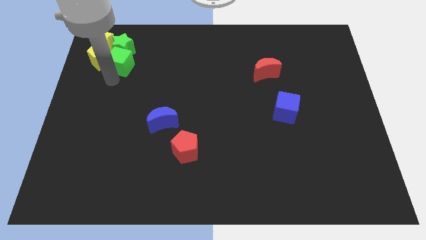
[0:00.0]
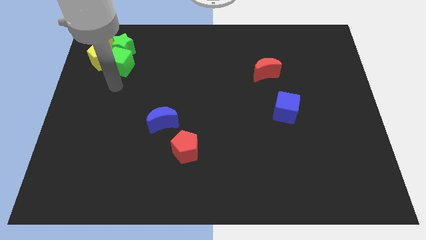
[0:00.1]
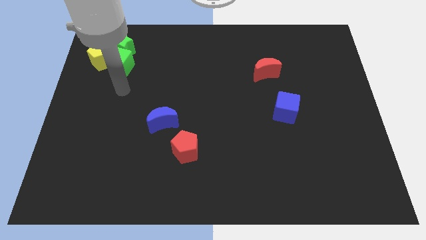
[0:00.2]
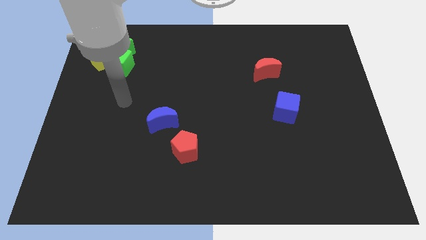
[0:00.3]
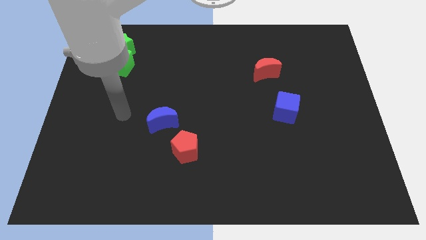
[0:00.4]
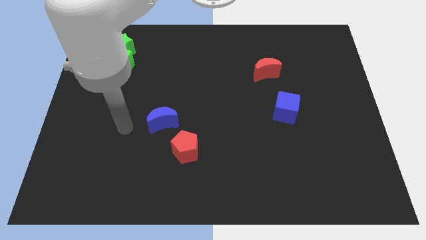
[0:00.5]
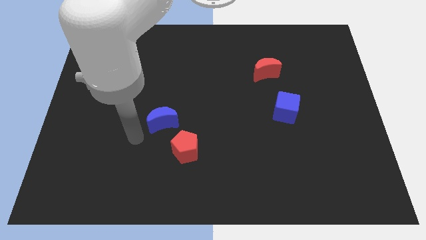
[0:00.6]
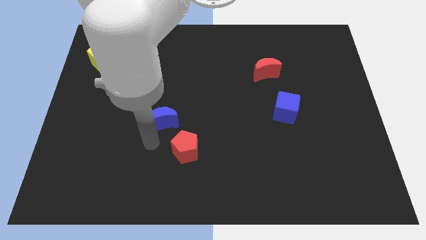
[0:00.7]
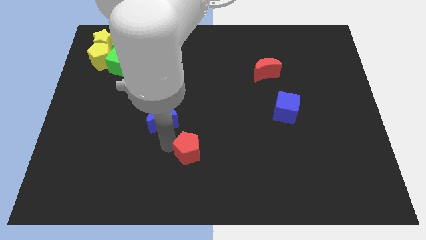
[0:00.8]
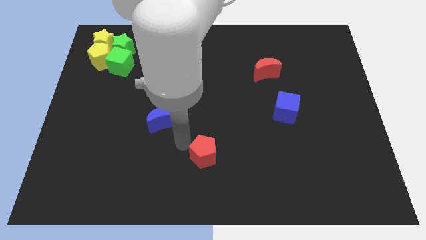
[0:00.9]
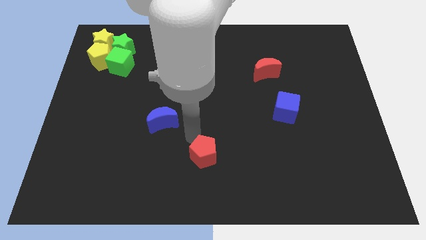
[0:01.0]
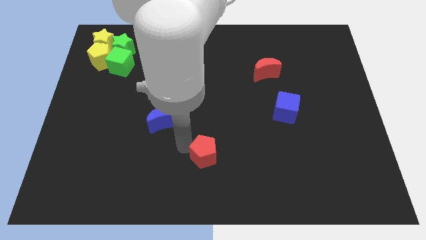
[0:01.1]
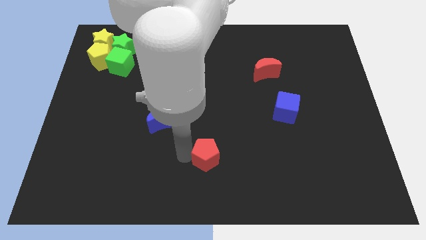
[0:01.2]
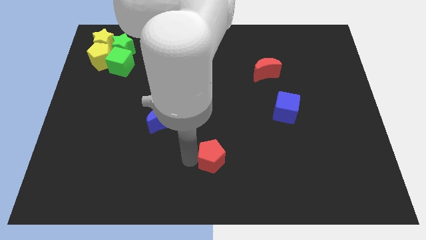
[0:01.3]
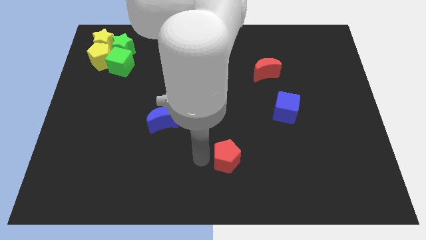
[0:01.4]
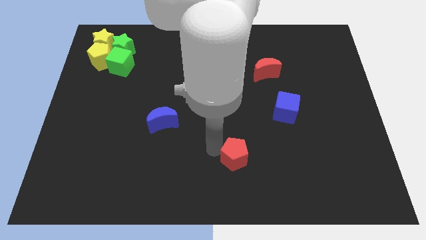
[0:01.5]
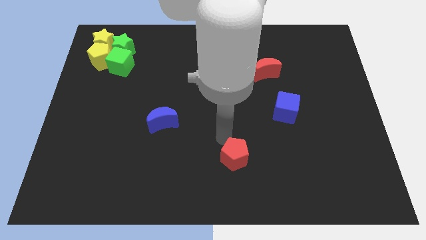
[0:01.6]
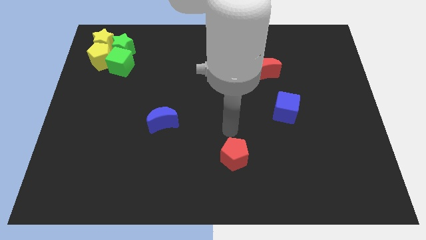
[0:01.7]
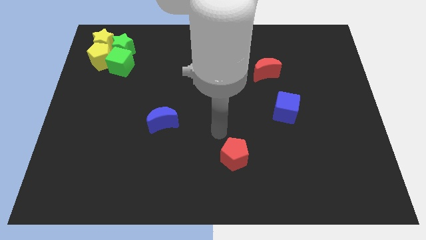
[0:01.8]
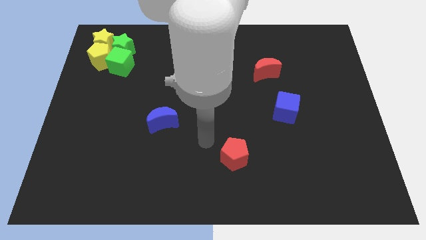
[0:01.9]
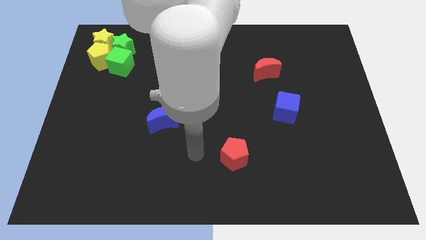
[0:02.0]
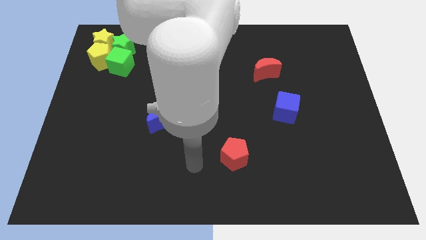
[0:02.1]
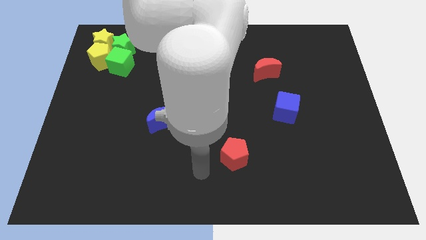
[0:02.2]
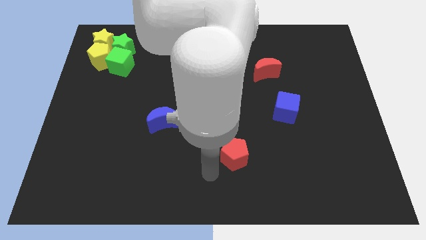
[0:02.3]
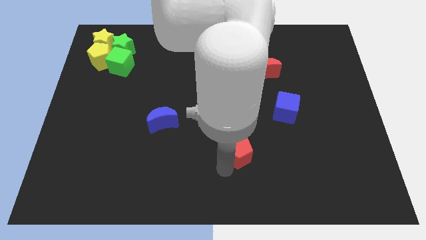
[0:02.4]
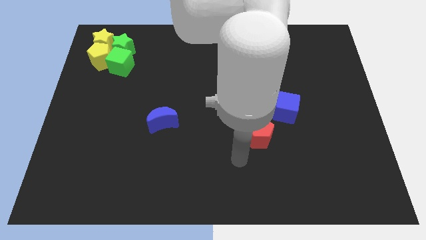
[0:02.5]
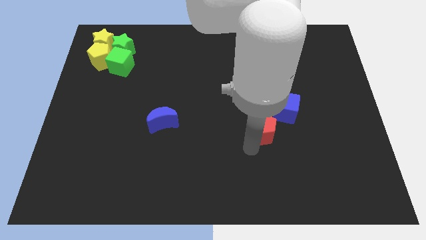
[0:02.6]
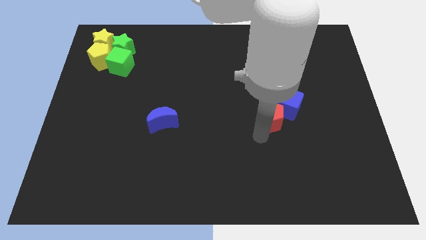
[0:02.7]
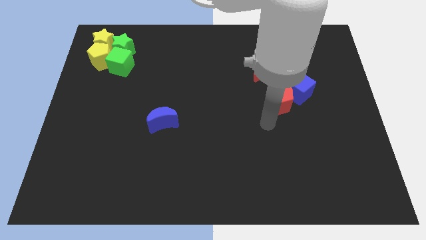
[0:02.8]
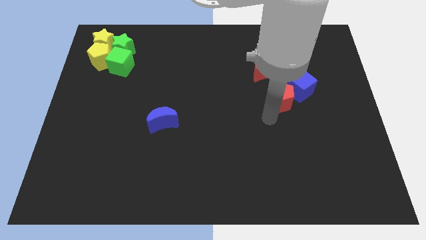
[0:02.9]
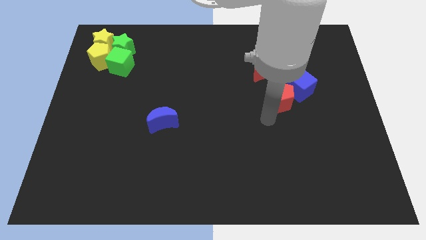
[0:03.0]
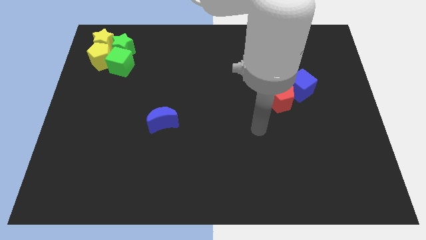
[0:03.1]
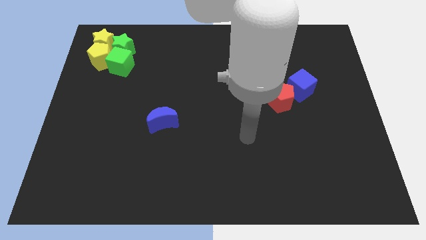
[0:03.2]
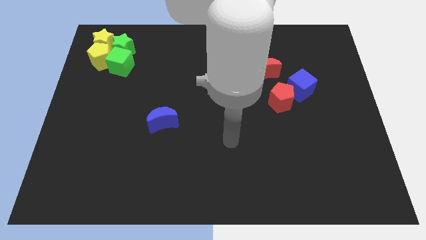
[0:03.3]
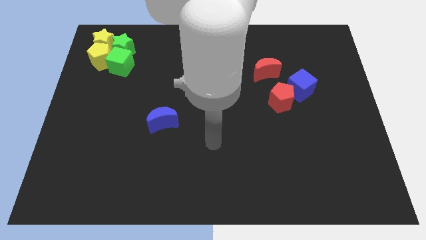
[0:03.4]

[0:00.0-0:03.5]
move the red pentagon into the blue cube

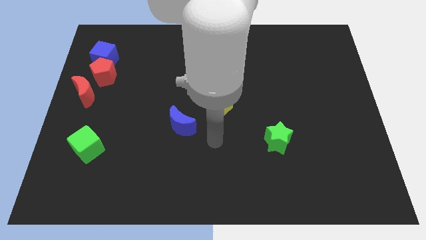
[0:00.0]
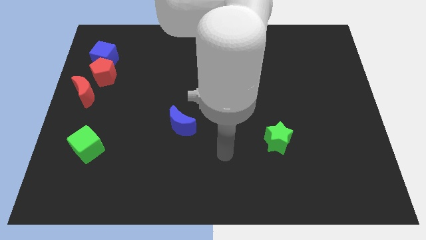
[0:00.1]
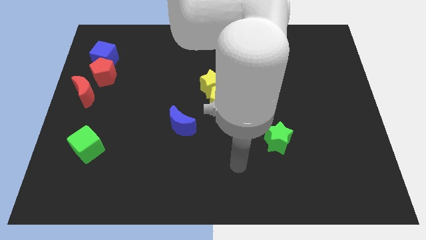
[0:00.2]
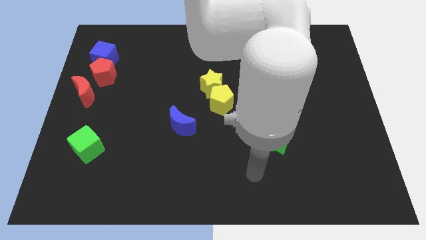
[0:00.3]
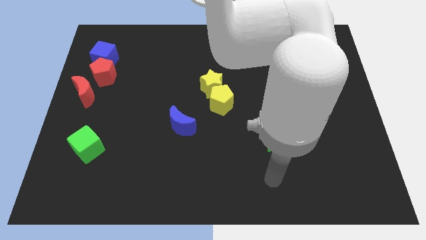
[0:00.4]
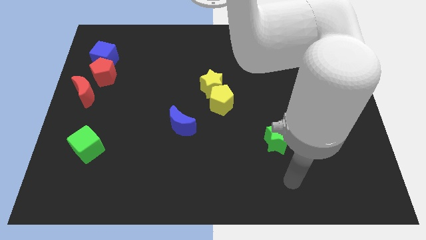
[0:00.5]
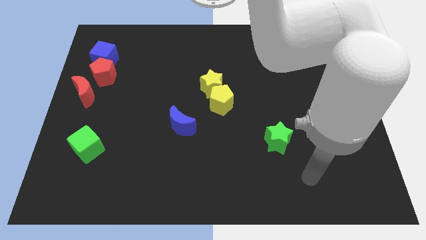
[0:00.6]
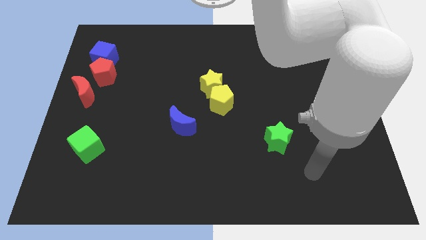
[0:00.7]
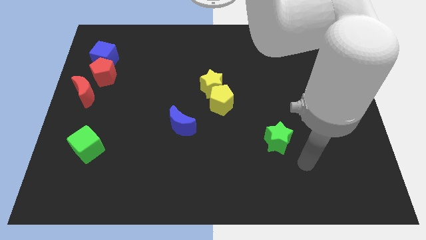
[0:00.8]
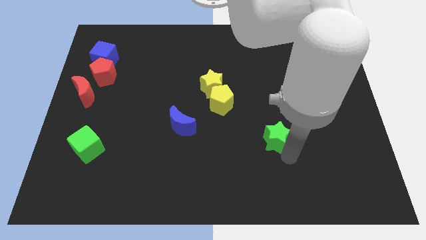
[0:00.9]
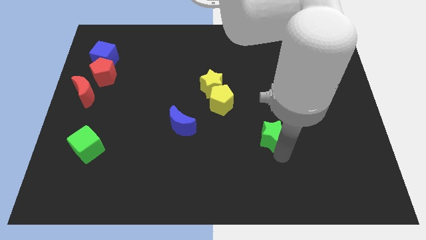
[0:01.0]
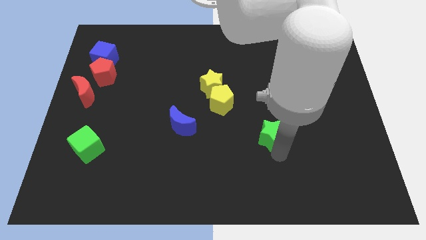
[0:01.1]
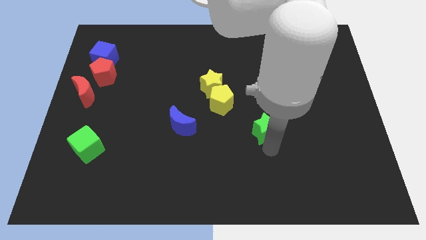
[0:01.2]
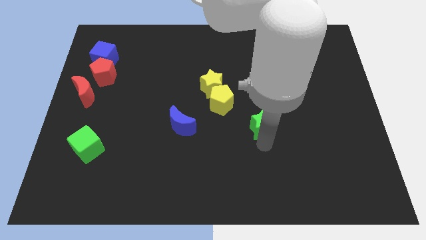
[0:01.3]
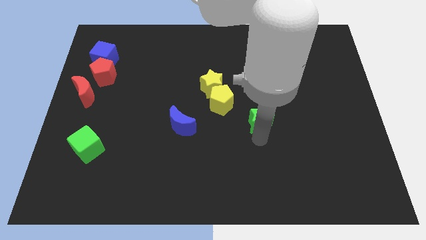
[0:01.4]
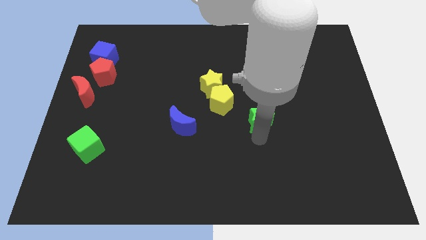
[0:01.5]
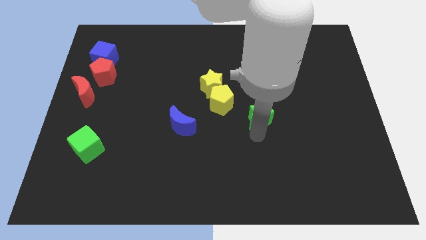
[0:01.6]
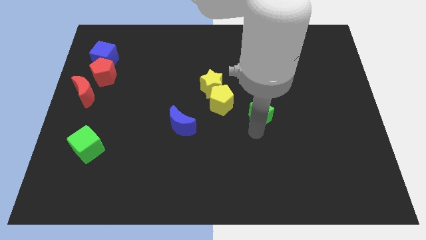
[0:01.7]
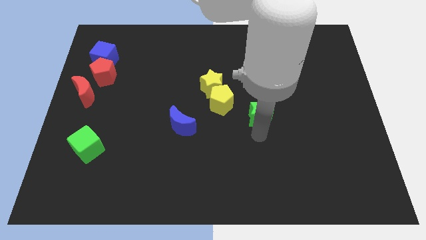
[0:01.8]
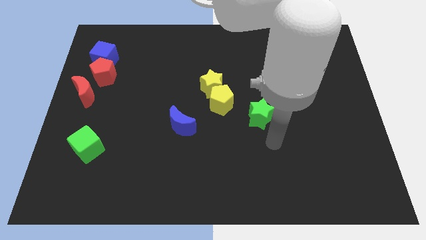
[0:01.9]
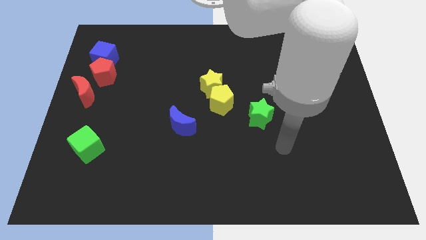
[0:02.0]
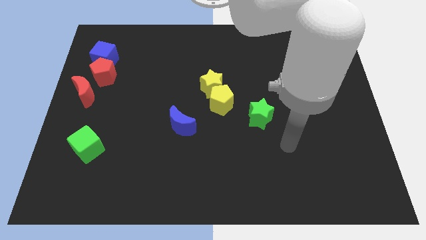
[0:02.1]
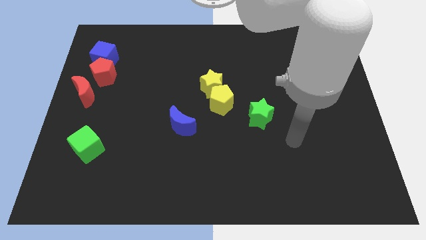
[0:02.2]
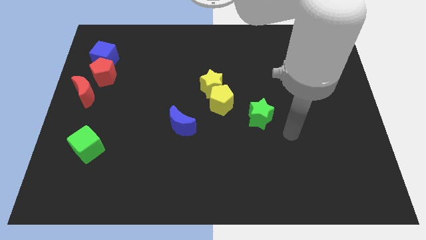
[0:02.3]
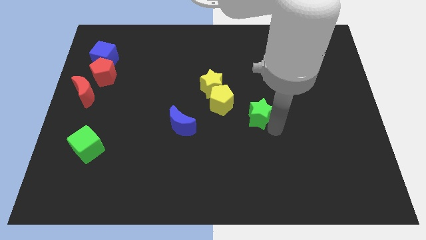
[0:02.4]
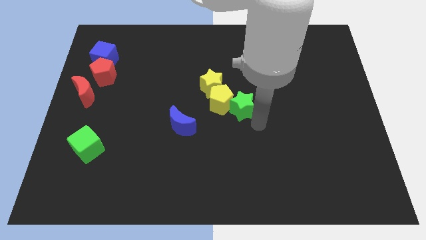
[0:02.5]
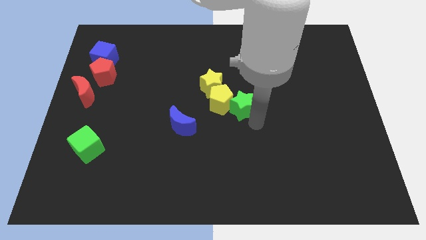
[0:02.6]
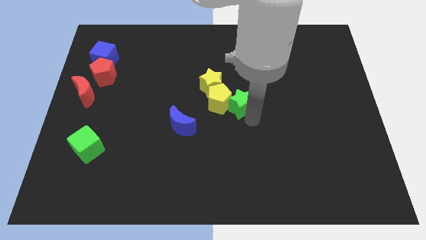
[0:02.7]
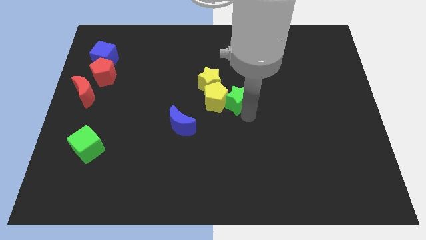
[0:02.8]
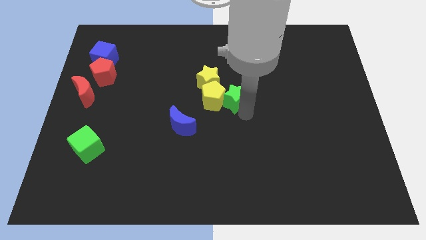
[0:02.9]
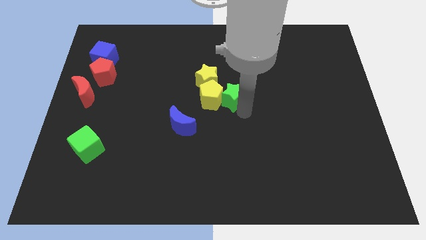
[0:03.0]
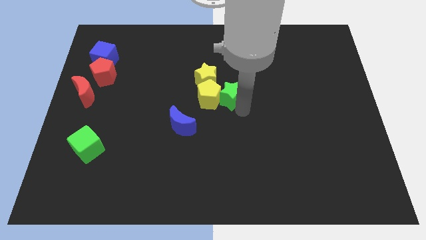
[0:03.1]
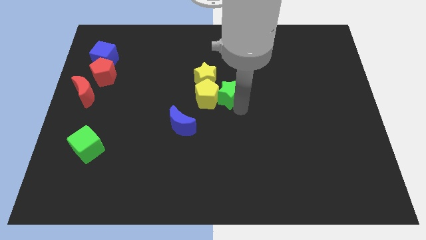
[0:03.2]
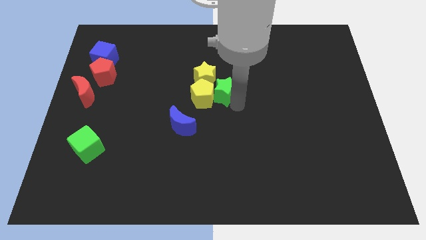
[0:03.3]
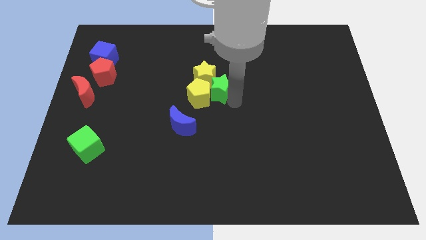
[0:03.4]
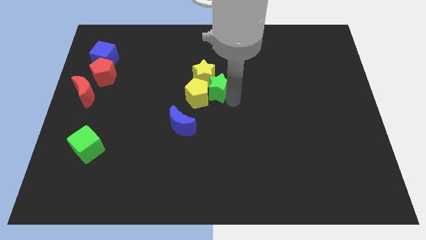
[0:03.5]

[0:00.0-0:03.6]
push the green star into the yellow star and yellow pentagon

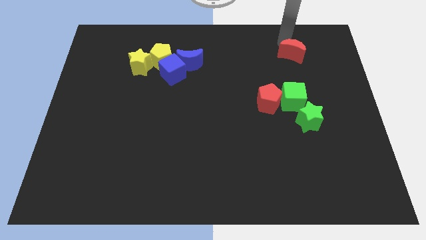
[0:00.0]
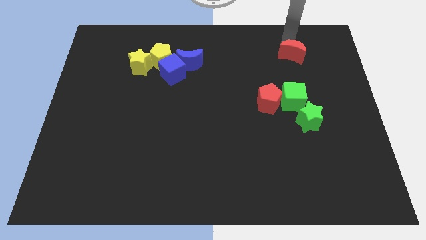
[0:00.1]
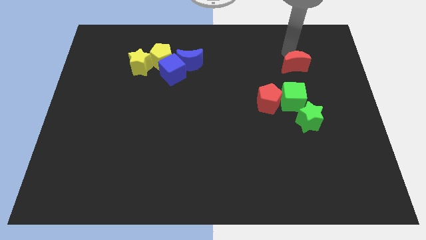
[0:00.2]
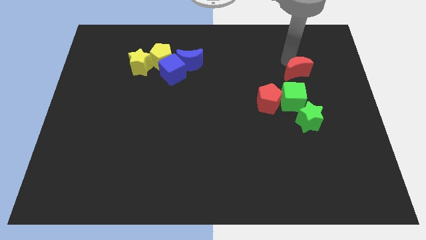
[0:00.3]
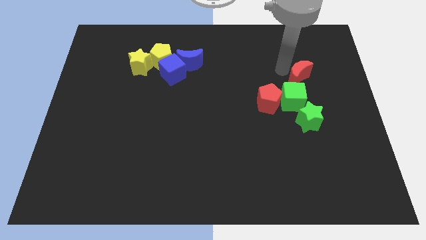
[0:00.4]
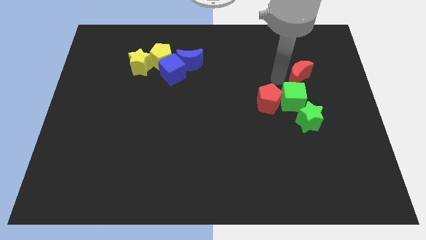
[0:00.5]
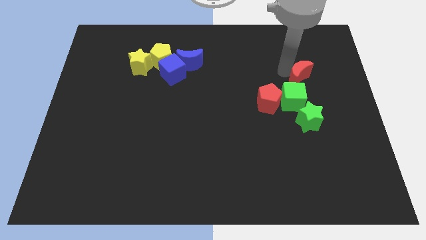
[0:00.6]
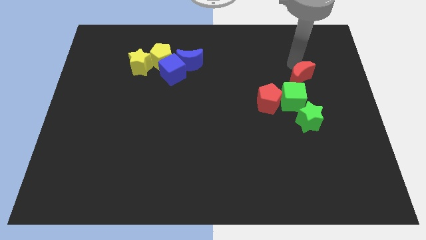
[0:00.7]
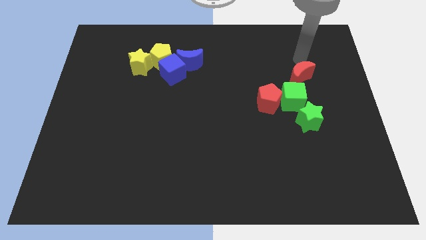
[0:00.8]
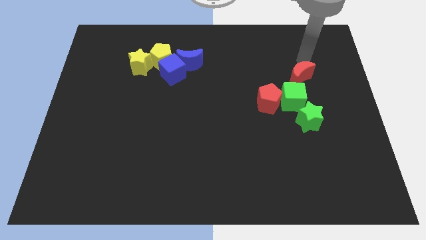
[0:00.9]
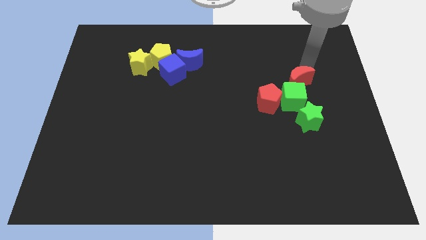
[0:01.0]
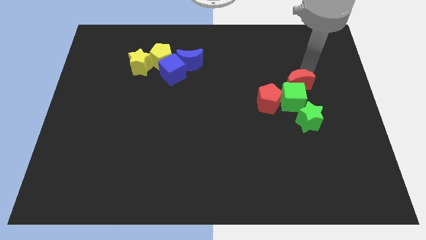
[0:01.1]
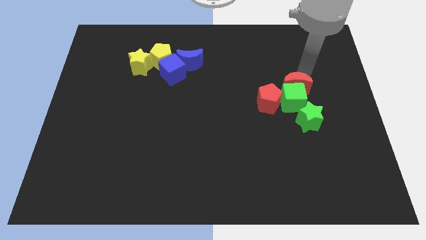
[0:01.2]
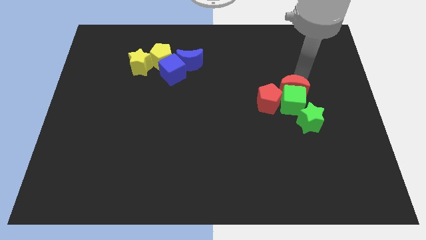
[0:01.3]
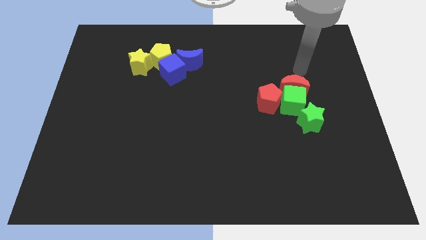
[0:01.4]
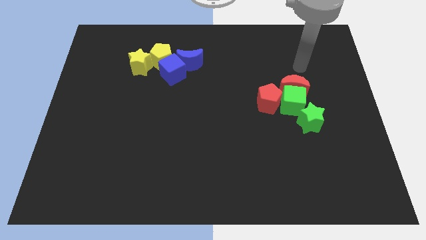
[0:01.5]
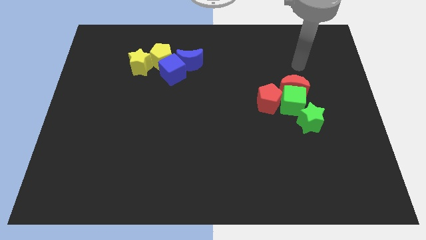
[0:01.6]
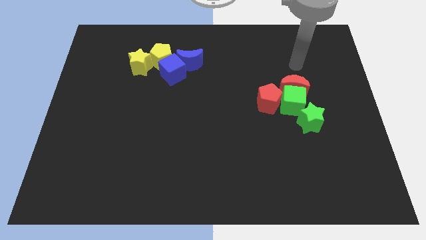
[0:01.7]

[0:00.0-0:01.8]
move the red crescent above the green cube
